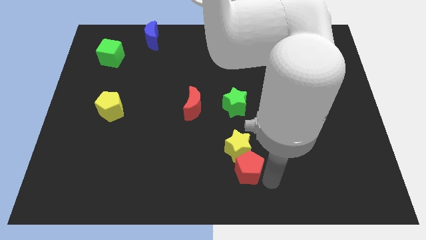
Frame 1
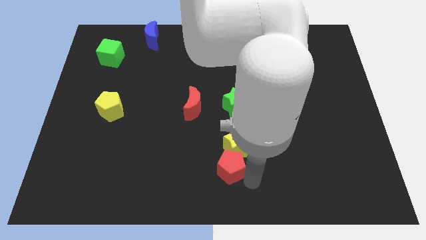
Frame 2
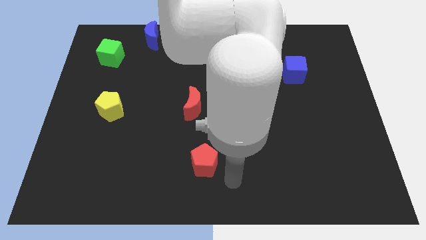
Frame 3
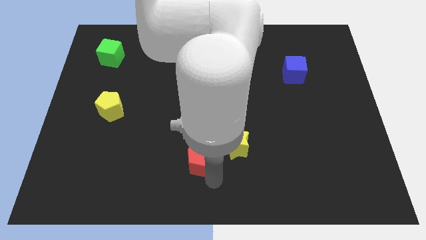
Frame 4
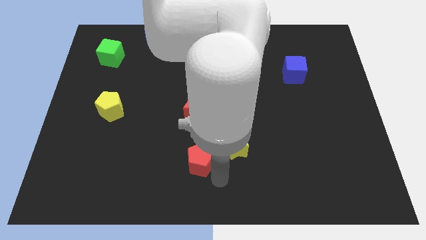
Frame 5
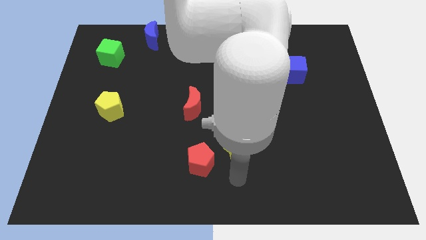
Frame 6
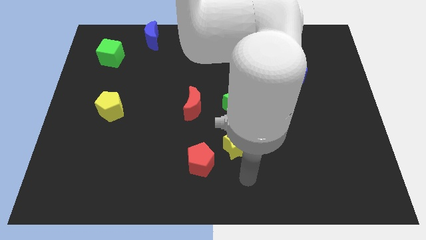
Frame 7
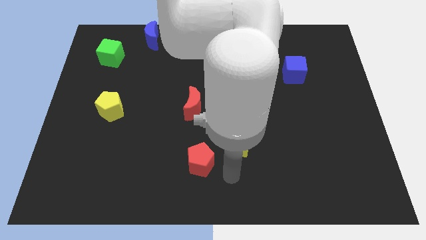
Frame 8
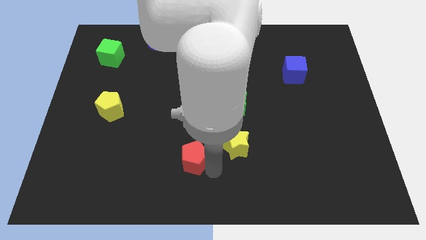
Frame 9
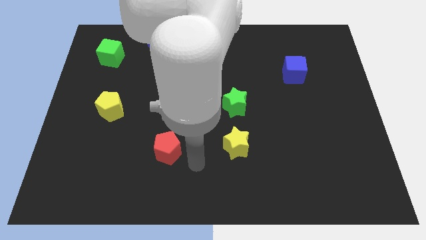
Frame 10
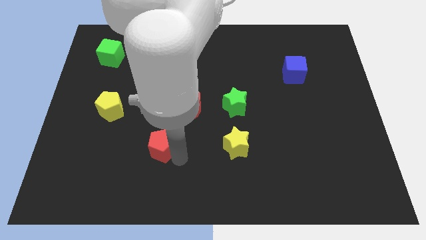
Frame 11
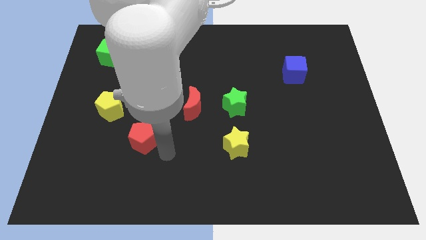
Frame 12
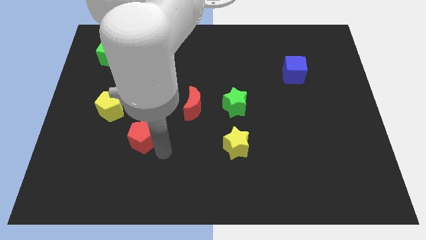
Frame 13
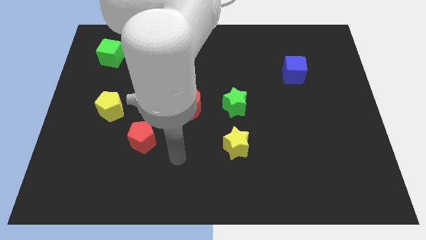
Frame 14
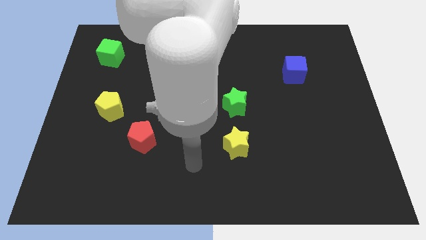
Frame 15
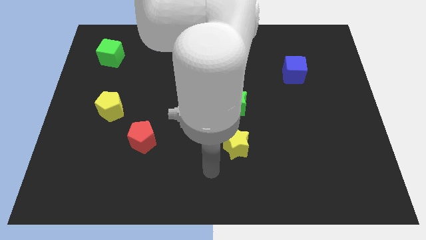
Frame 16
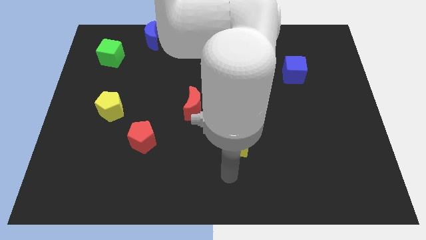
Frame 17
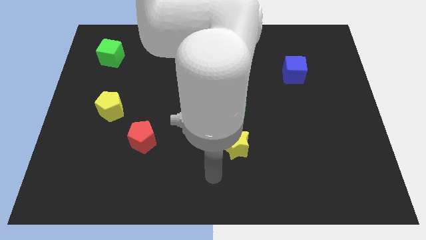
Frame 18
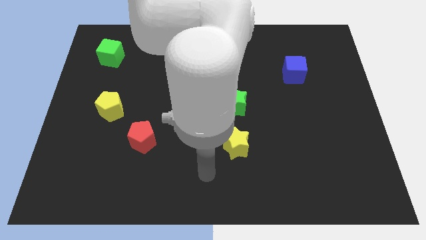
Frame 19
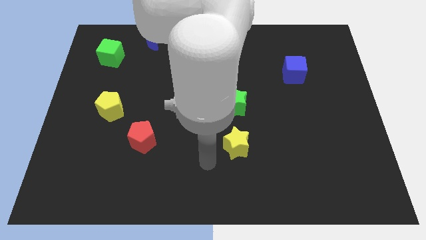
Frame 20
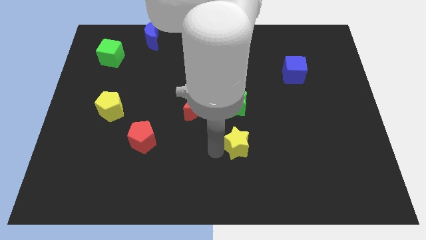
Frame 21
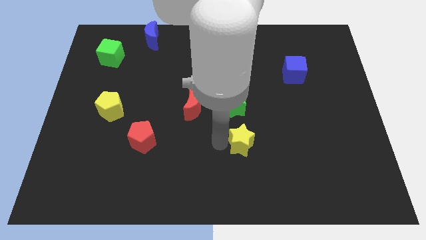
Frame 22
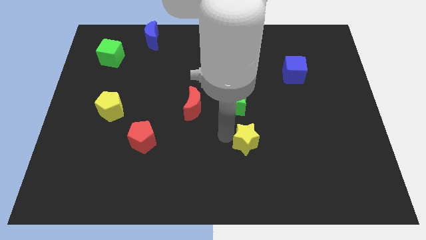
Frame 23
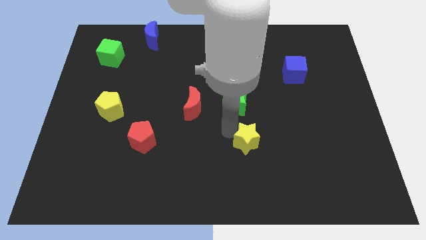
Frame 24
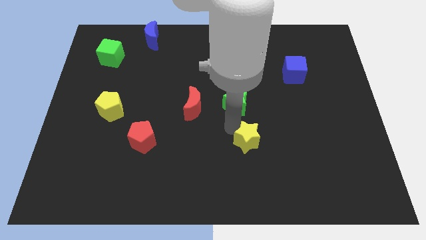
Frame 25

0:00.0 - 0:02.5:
separate red pentagon and yellow star

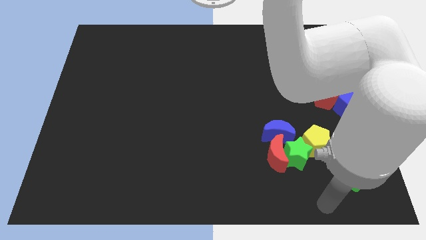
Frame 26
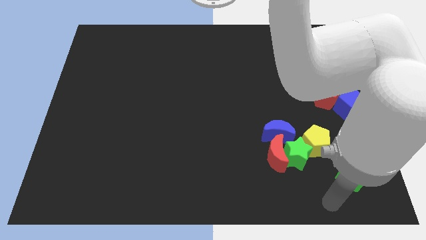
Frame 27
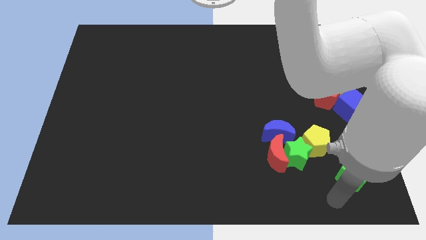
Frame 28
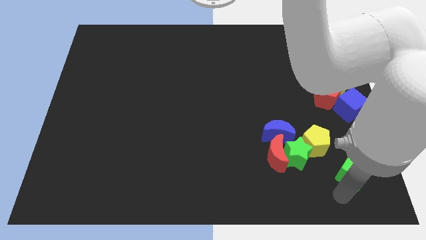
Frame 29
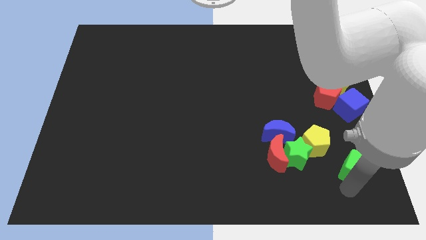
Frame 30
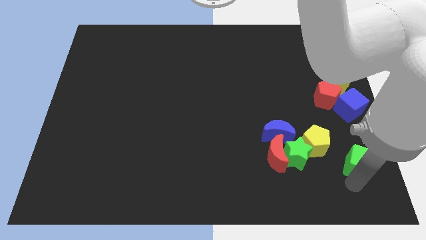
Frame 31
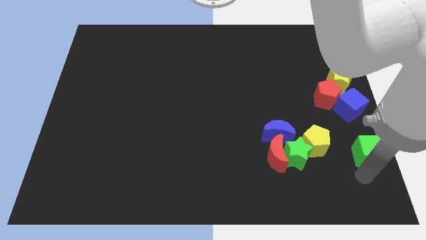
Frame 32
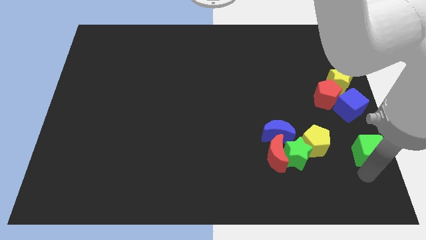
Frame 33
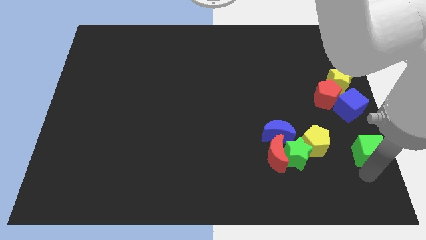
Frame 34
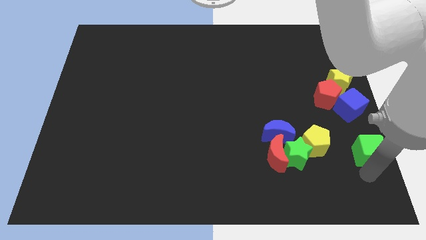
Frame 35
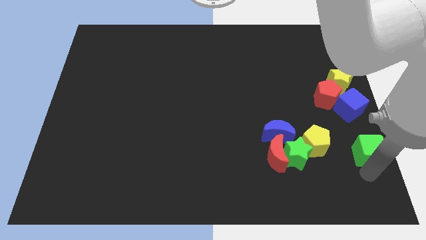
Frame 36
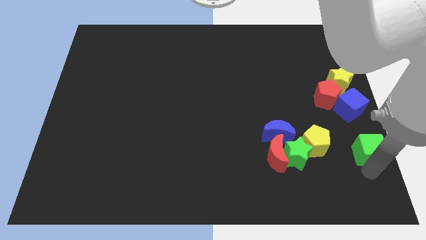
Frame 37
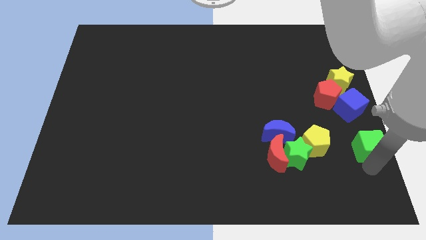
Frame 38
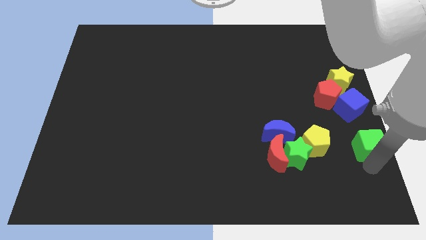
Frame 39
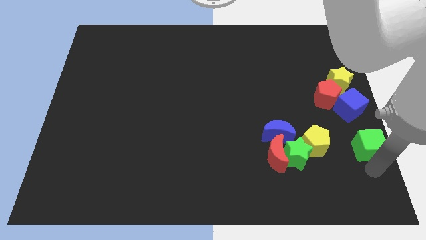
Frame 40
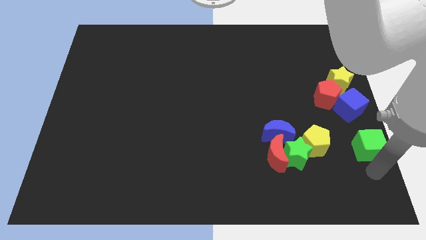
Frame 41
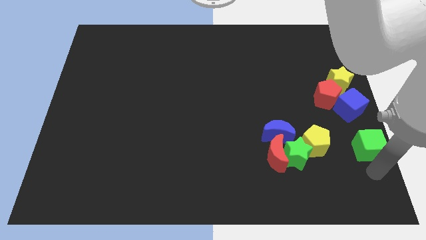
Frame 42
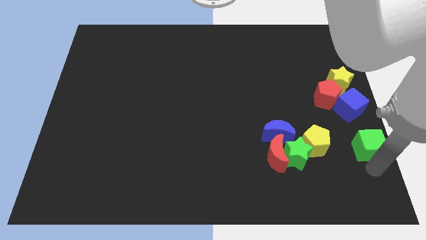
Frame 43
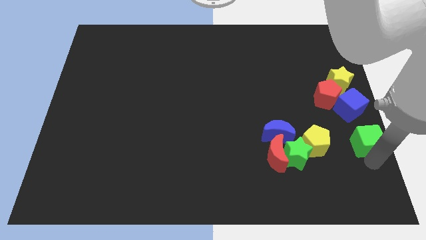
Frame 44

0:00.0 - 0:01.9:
move the blue cube on right to the yellow pentagon

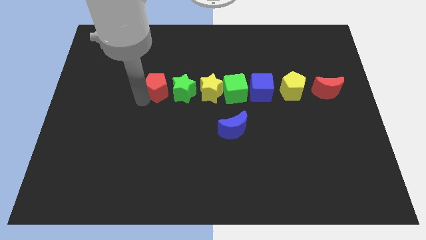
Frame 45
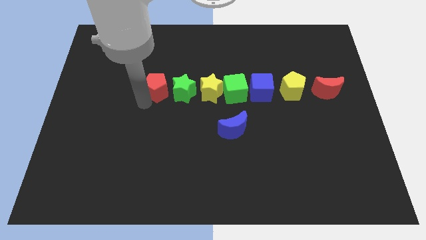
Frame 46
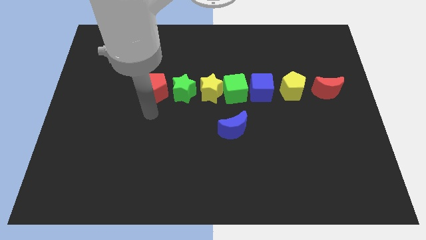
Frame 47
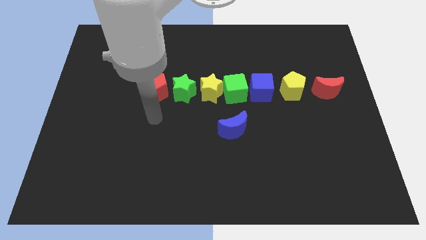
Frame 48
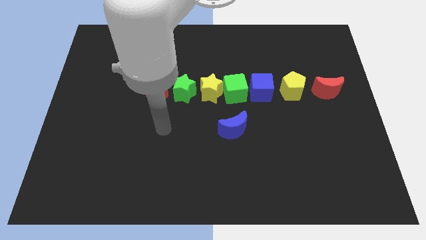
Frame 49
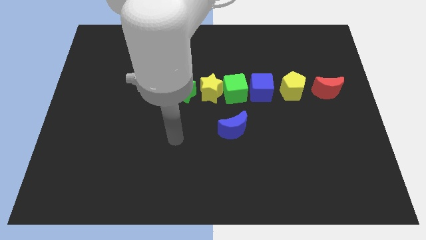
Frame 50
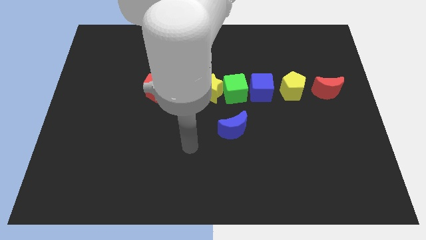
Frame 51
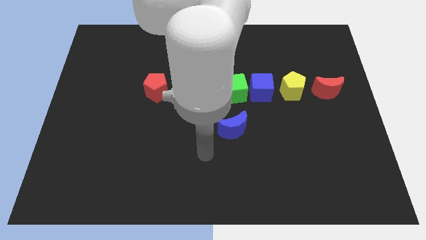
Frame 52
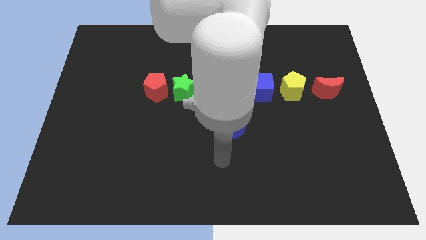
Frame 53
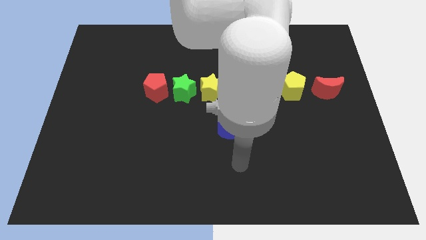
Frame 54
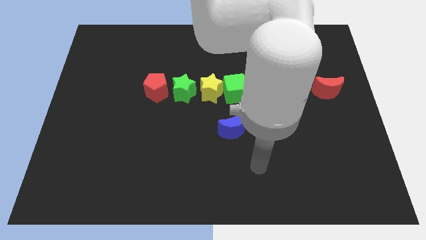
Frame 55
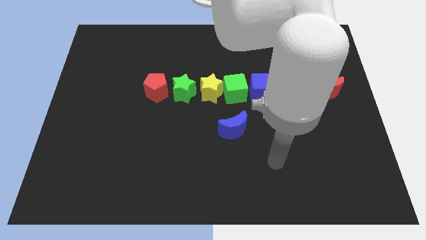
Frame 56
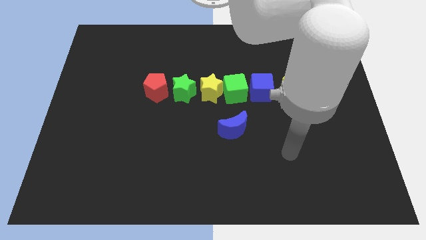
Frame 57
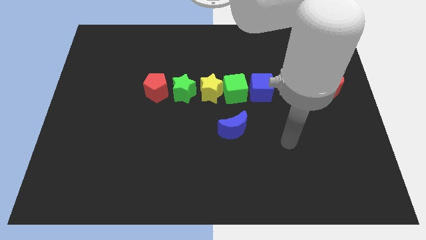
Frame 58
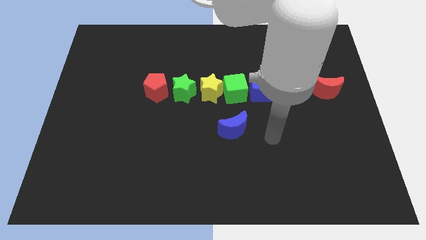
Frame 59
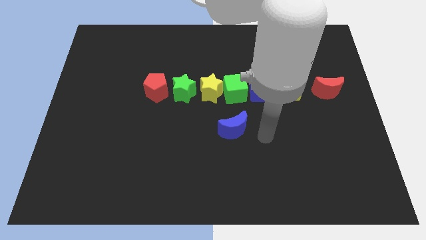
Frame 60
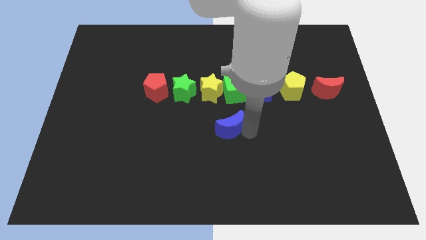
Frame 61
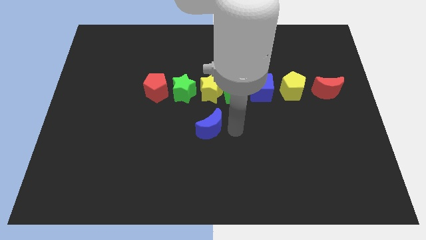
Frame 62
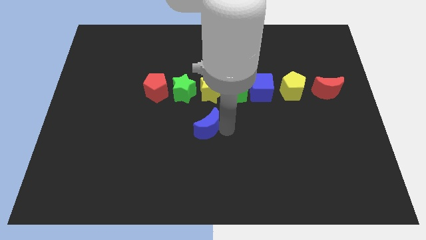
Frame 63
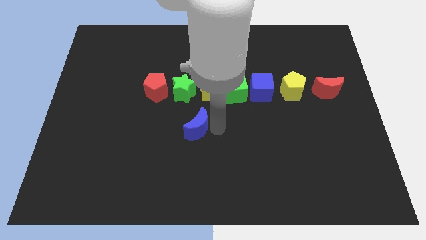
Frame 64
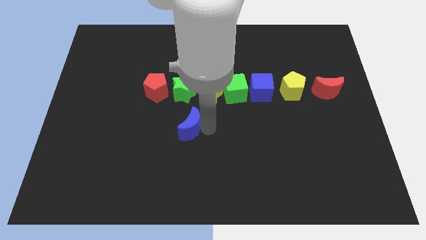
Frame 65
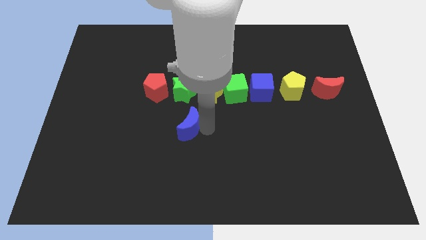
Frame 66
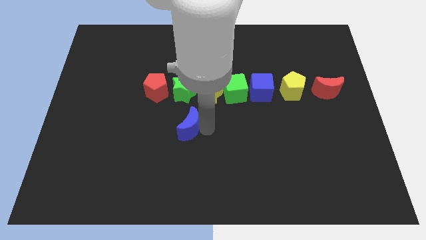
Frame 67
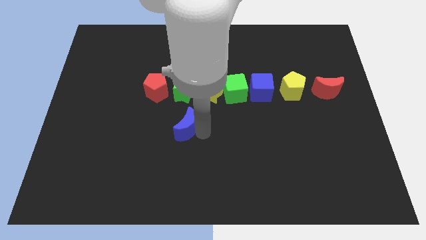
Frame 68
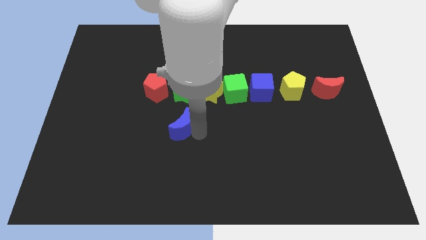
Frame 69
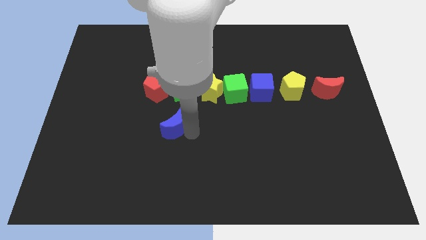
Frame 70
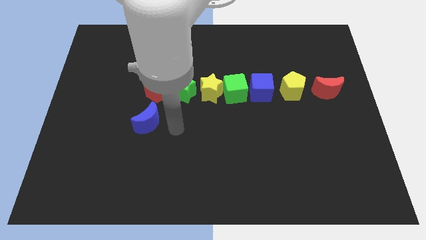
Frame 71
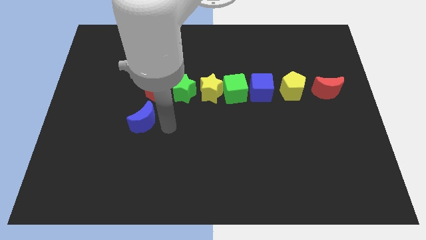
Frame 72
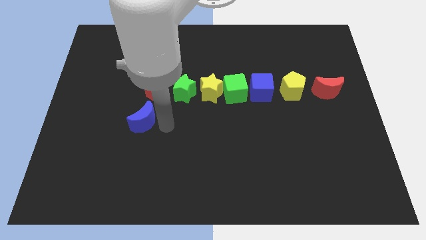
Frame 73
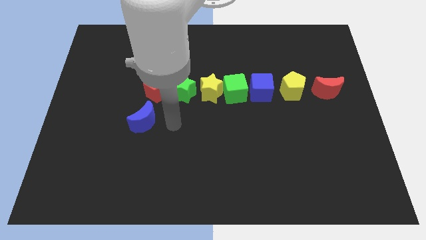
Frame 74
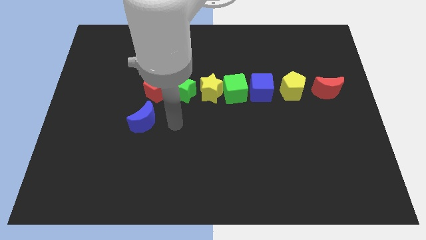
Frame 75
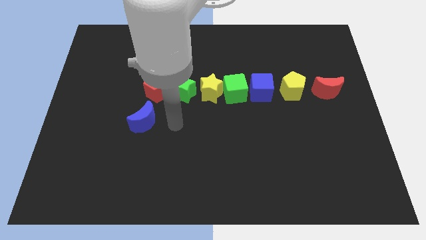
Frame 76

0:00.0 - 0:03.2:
push the blue crescent to the bottom left of the red pentagon

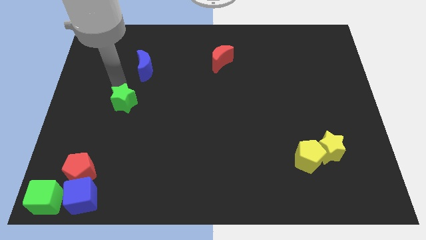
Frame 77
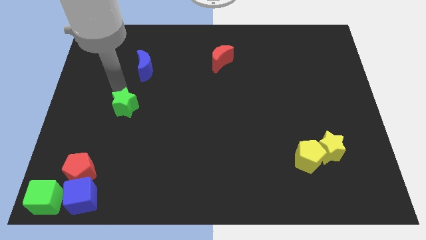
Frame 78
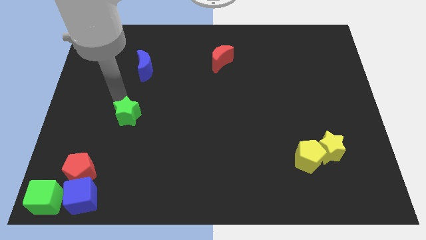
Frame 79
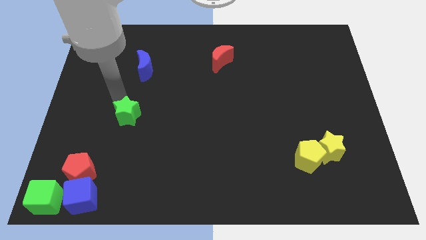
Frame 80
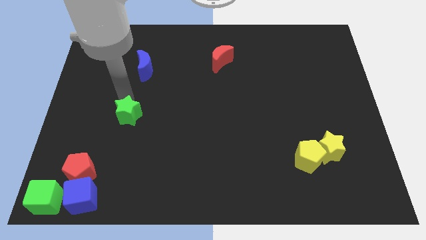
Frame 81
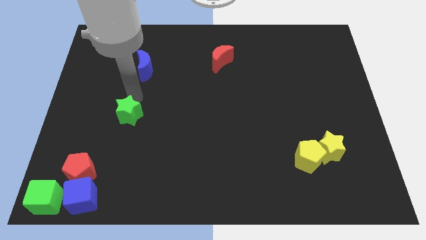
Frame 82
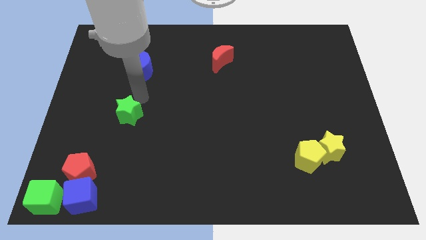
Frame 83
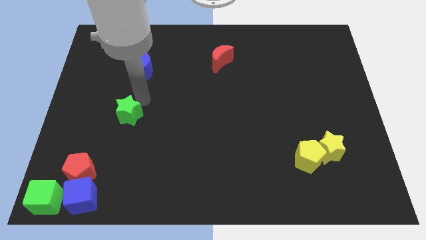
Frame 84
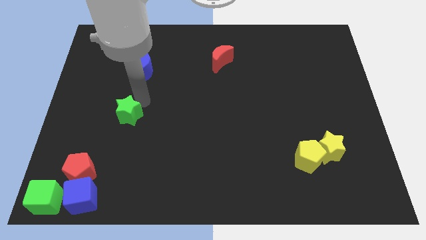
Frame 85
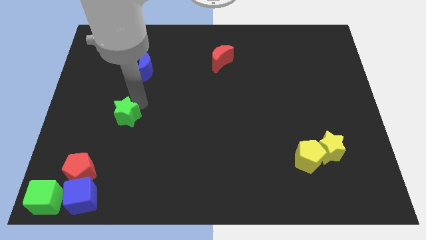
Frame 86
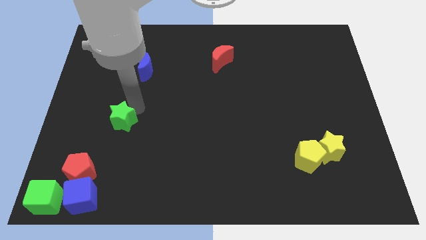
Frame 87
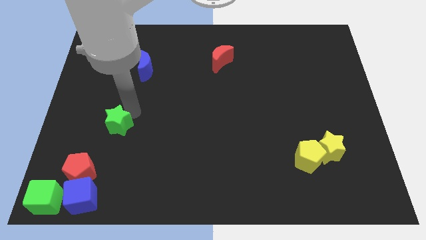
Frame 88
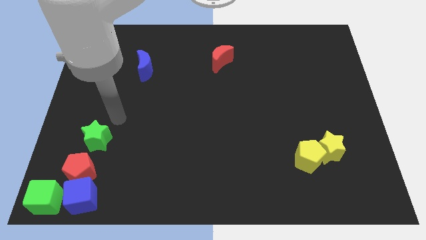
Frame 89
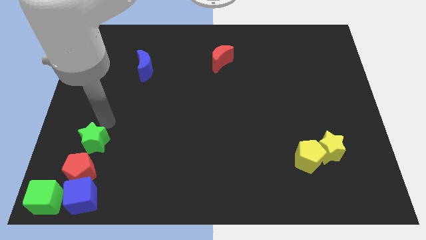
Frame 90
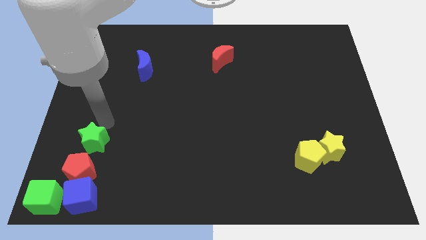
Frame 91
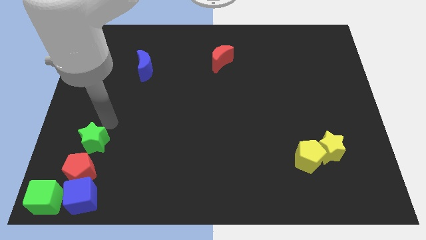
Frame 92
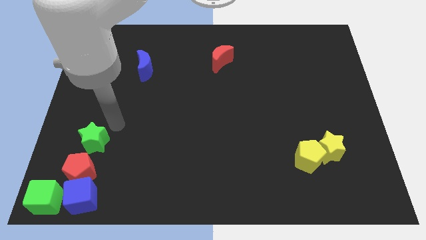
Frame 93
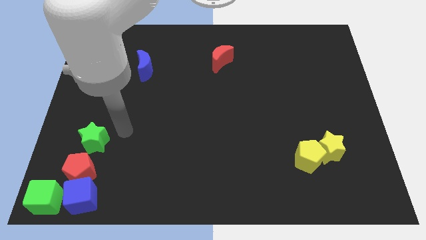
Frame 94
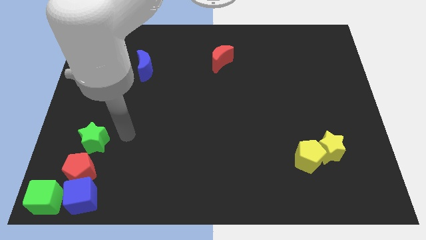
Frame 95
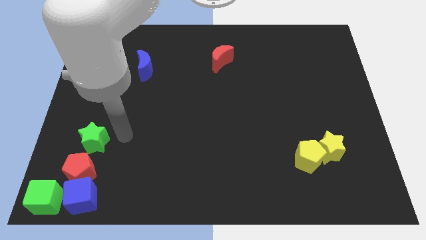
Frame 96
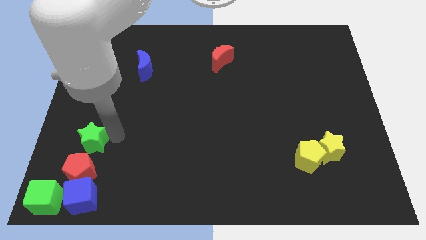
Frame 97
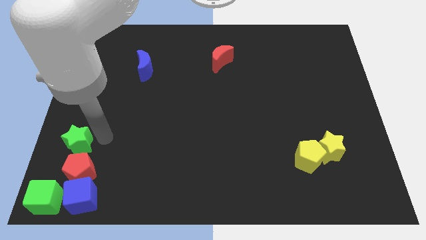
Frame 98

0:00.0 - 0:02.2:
push the green star to the top right side of the red pentagon
